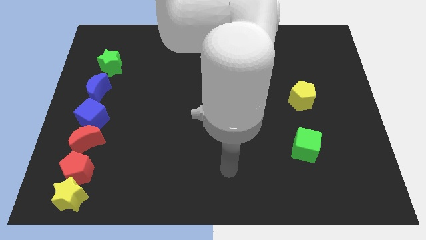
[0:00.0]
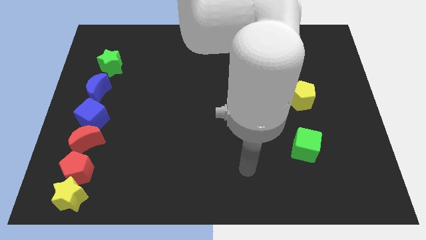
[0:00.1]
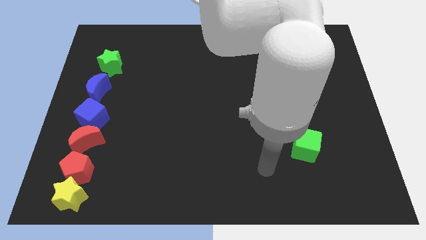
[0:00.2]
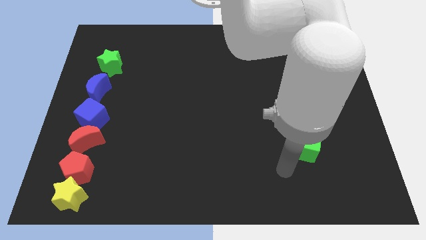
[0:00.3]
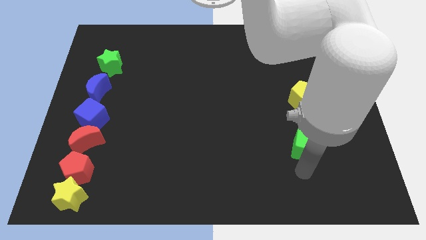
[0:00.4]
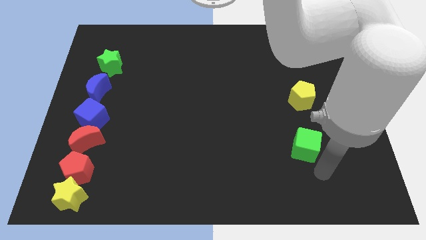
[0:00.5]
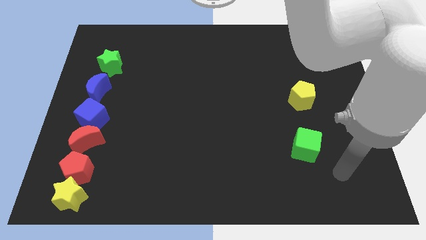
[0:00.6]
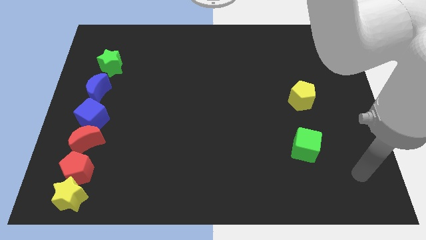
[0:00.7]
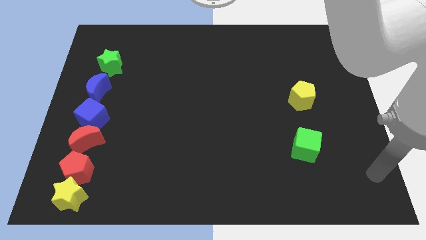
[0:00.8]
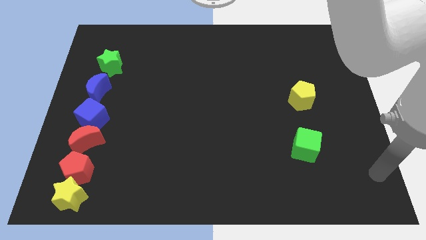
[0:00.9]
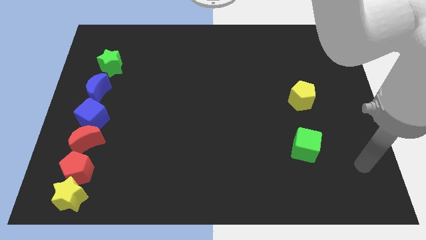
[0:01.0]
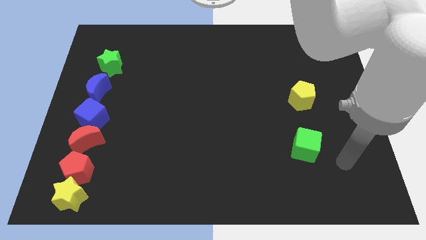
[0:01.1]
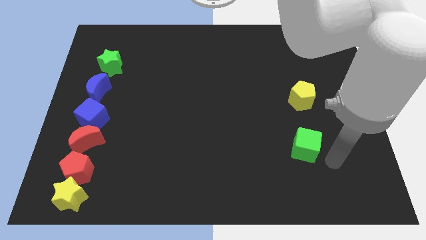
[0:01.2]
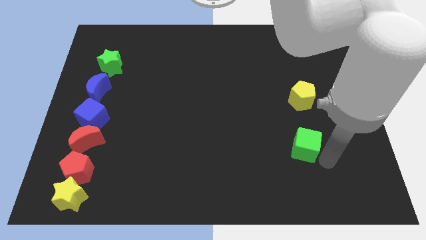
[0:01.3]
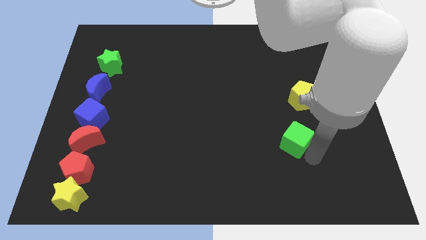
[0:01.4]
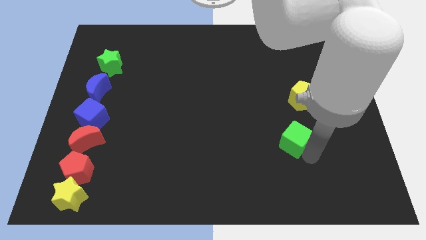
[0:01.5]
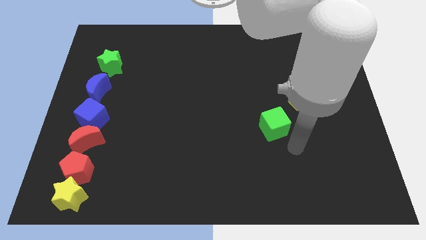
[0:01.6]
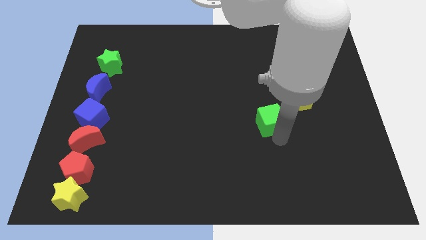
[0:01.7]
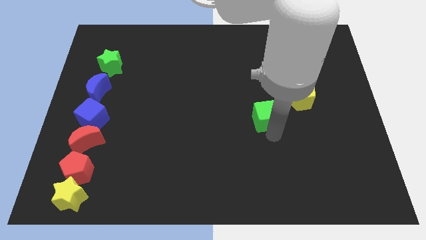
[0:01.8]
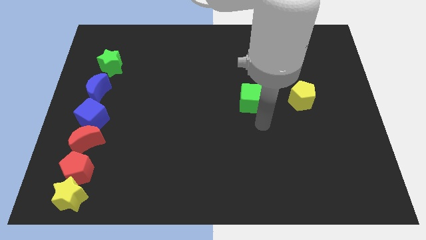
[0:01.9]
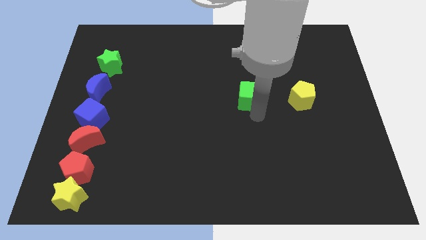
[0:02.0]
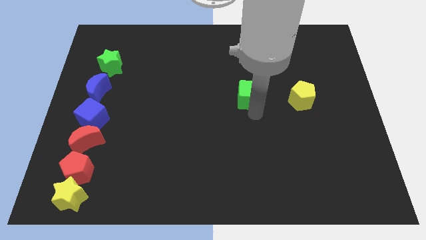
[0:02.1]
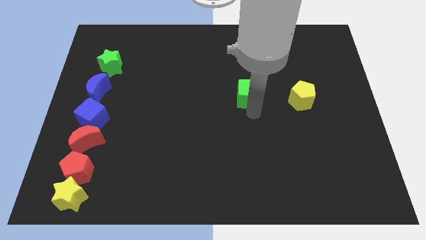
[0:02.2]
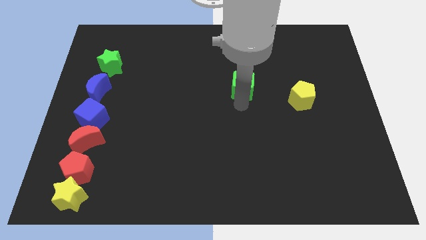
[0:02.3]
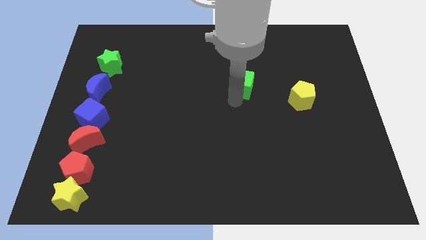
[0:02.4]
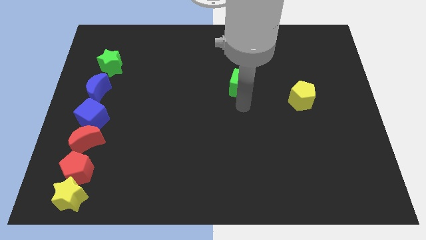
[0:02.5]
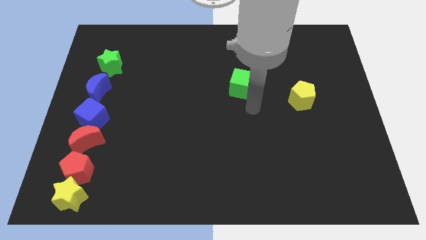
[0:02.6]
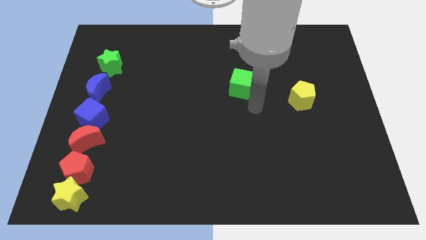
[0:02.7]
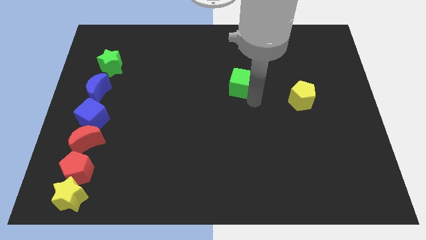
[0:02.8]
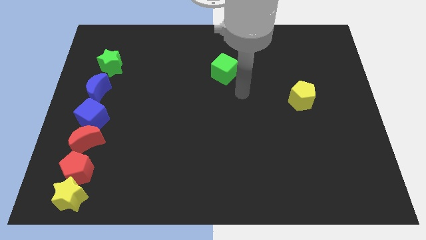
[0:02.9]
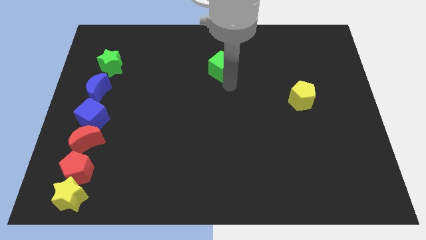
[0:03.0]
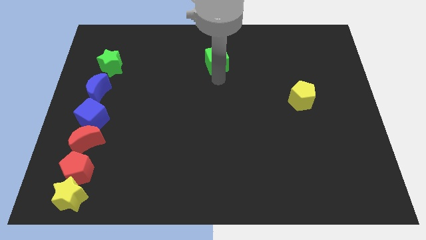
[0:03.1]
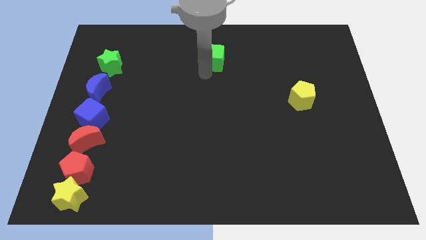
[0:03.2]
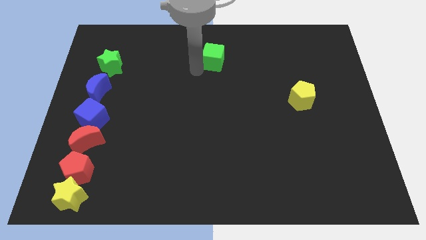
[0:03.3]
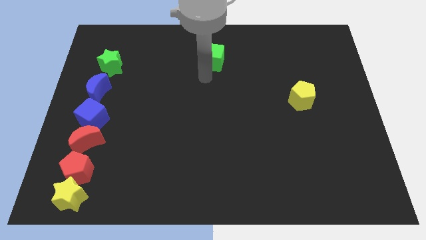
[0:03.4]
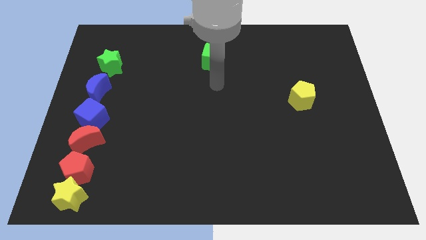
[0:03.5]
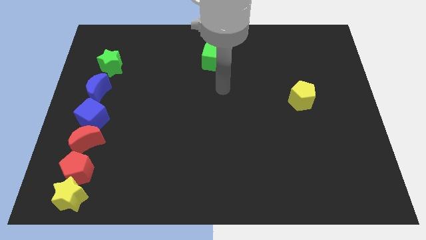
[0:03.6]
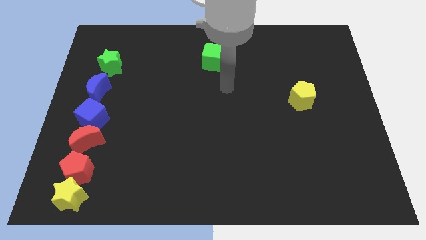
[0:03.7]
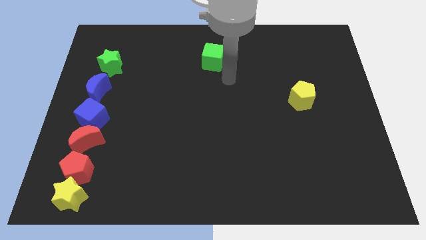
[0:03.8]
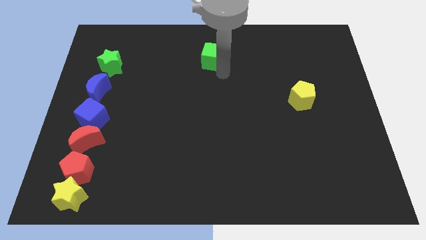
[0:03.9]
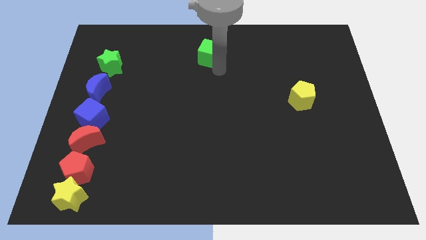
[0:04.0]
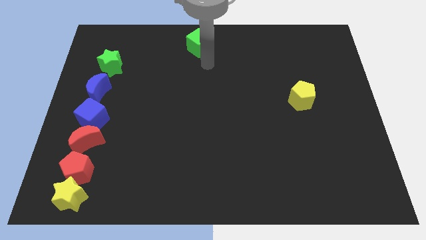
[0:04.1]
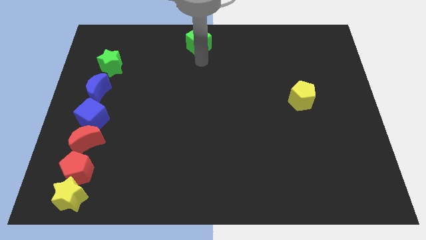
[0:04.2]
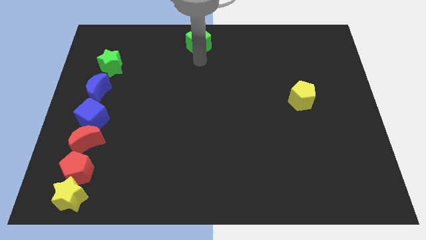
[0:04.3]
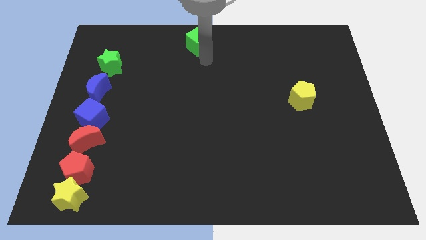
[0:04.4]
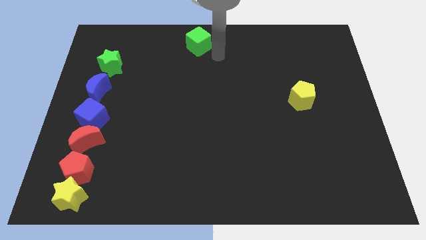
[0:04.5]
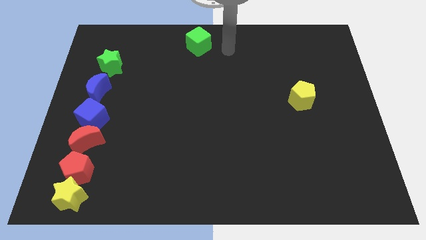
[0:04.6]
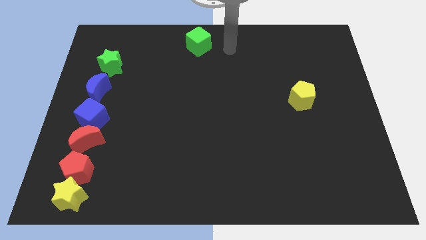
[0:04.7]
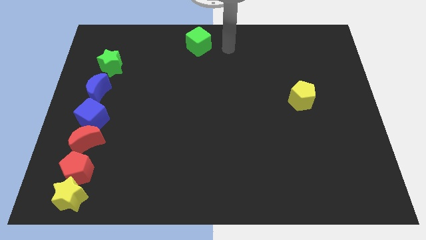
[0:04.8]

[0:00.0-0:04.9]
push green cube to the top center of the board

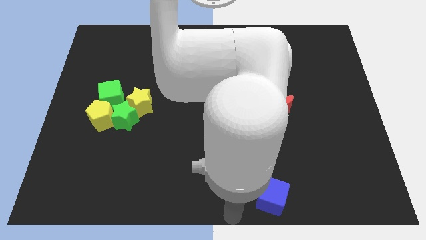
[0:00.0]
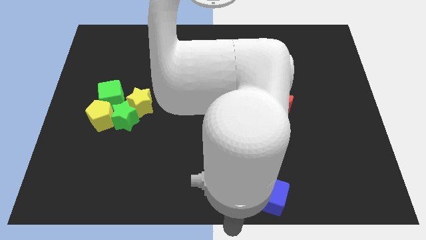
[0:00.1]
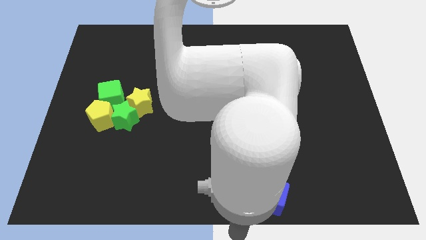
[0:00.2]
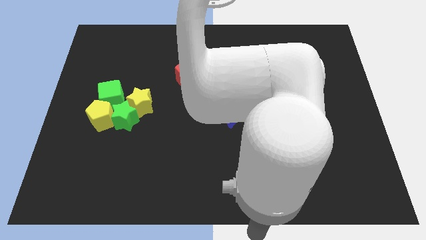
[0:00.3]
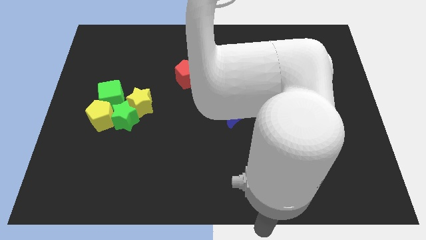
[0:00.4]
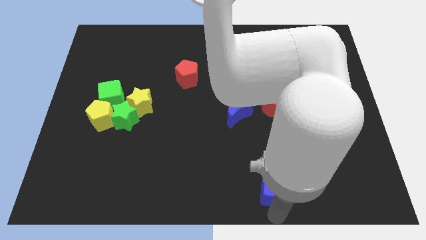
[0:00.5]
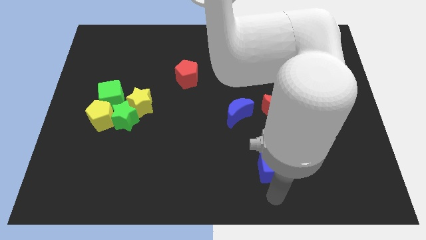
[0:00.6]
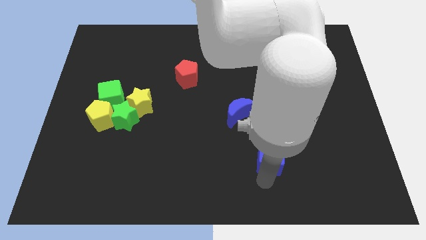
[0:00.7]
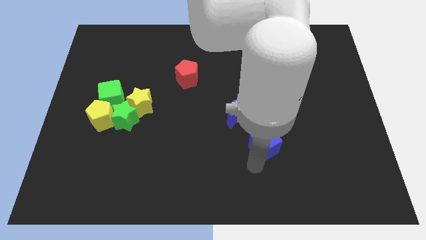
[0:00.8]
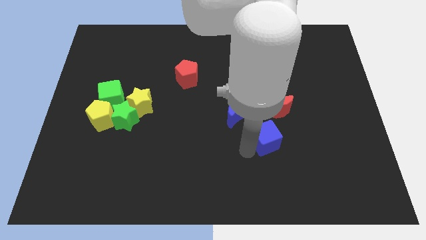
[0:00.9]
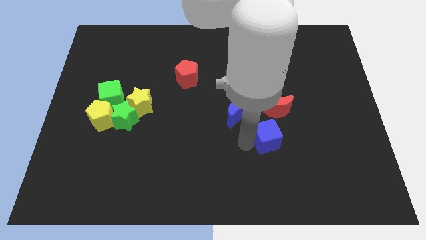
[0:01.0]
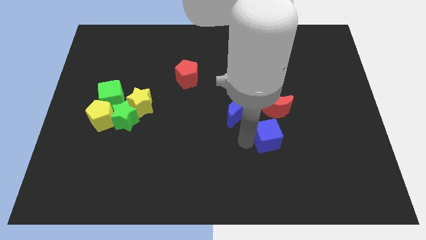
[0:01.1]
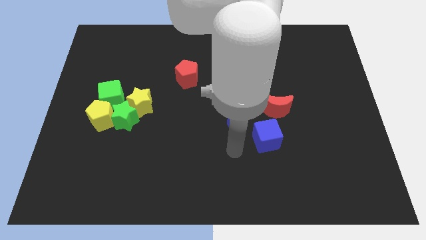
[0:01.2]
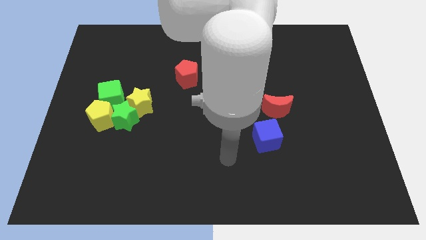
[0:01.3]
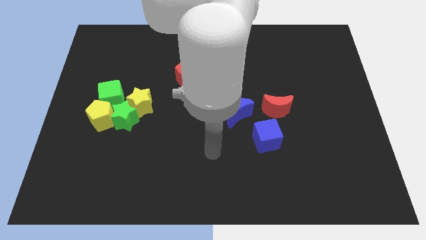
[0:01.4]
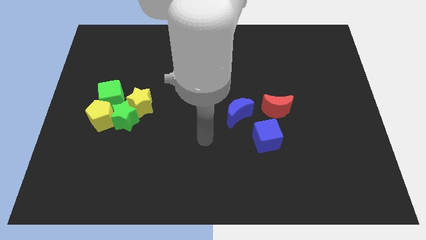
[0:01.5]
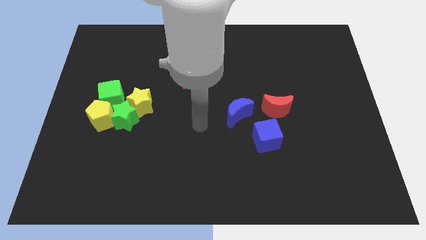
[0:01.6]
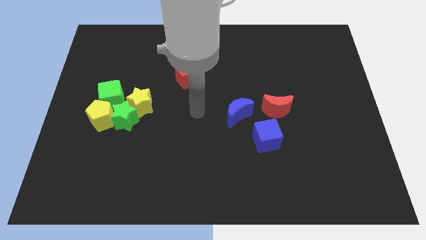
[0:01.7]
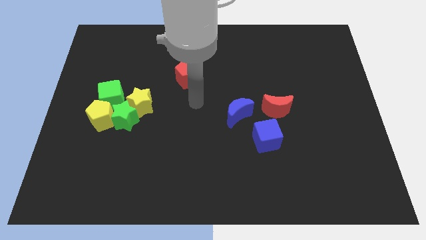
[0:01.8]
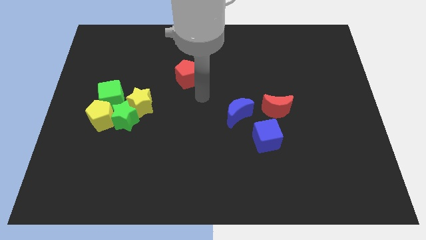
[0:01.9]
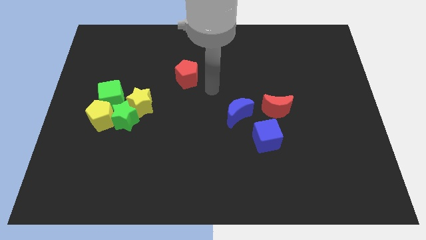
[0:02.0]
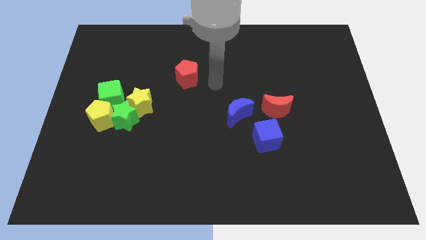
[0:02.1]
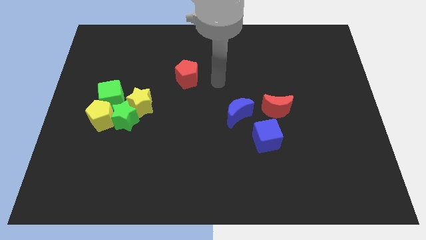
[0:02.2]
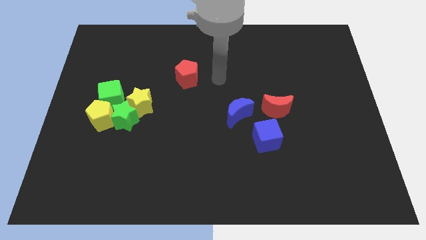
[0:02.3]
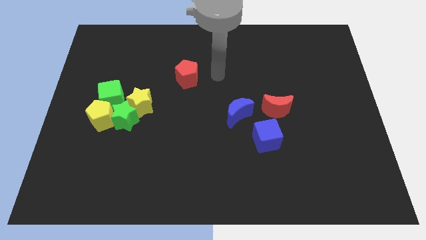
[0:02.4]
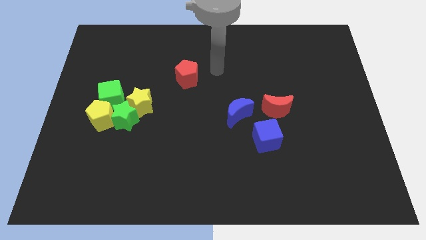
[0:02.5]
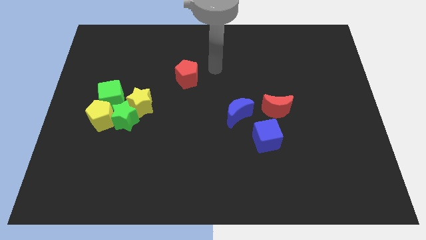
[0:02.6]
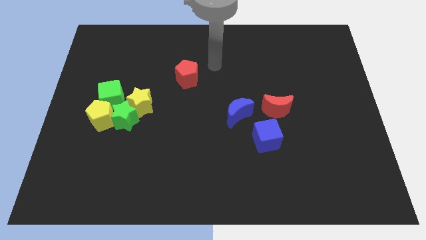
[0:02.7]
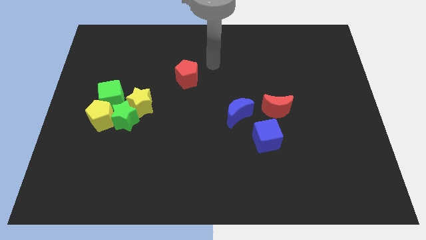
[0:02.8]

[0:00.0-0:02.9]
move the blue cube towards the red crescent

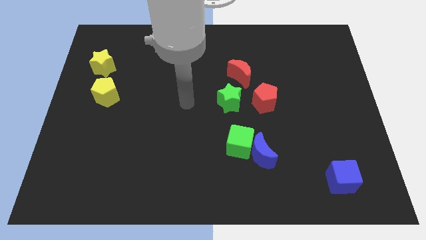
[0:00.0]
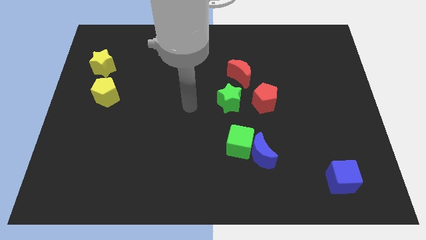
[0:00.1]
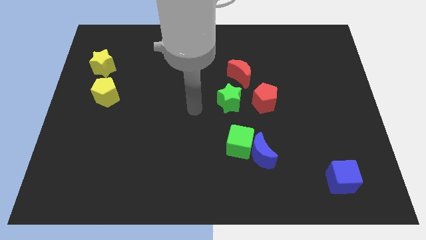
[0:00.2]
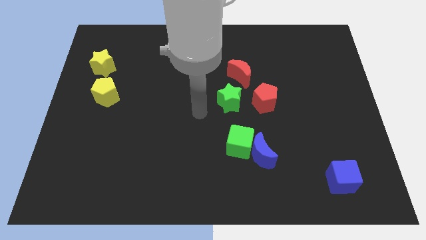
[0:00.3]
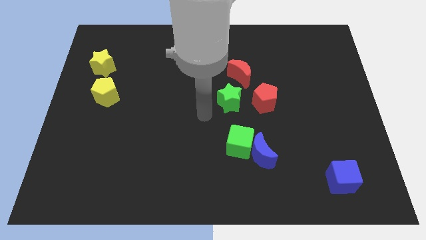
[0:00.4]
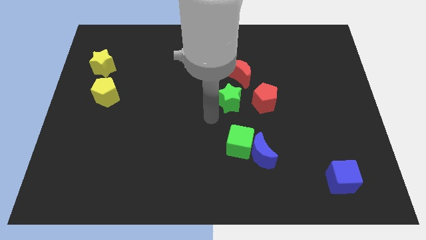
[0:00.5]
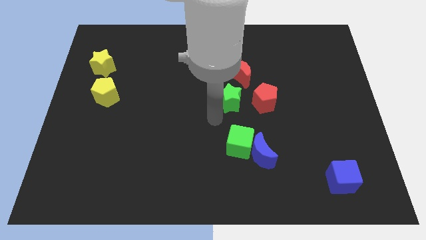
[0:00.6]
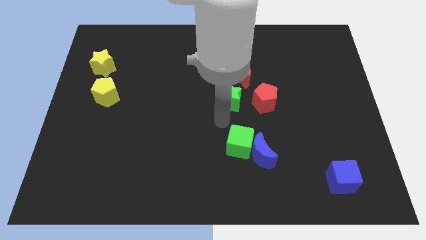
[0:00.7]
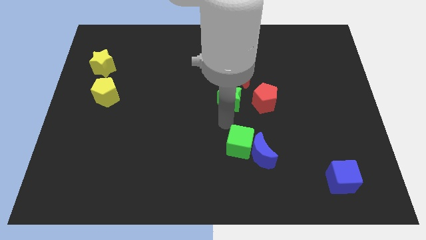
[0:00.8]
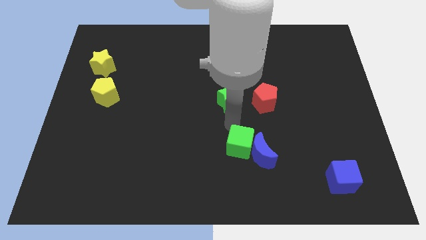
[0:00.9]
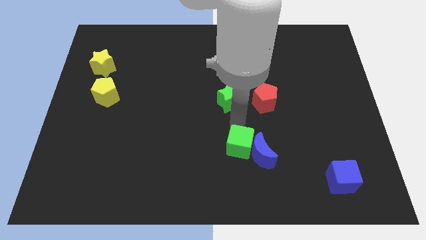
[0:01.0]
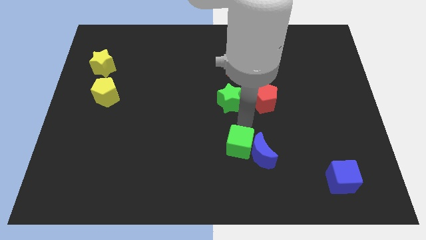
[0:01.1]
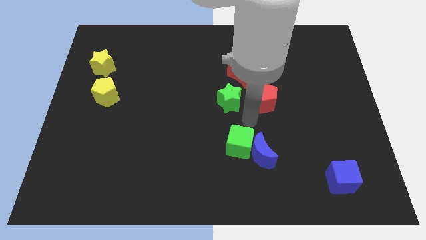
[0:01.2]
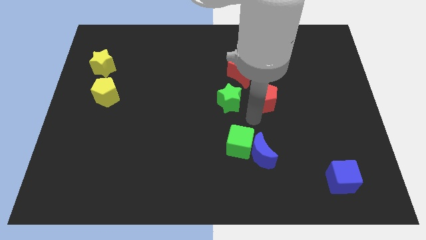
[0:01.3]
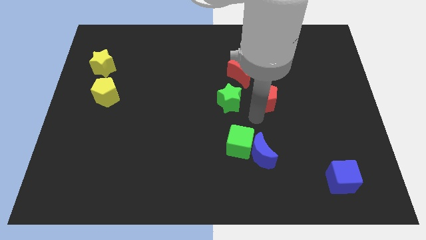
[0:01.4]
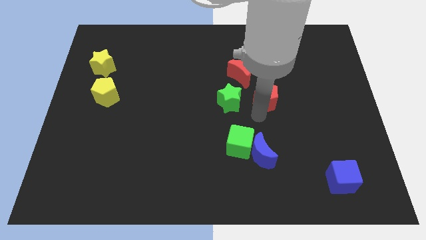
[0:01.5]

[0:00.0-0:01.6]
tap the bottom left side of the red pentagon
